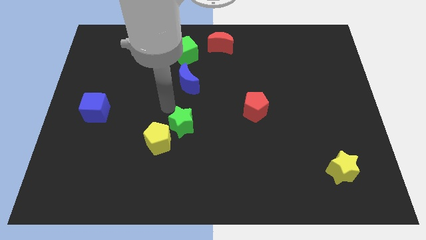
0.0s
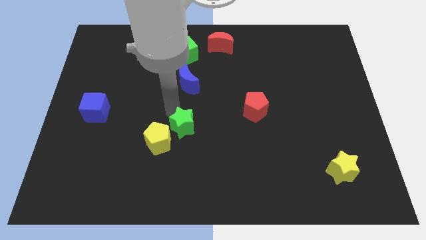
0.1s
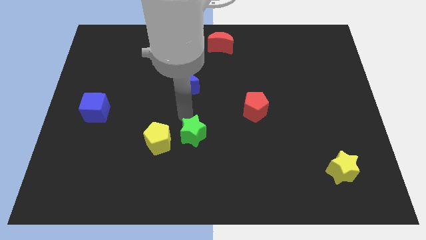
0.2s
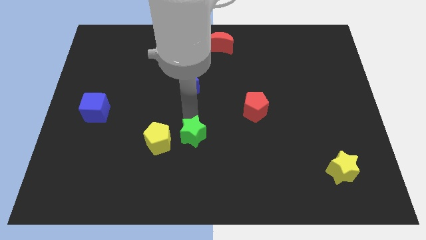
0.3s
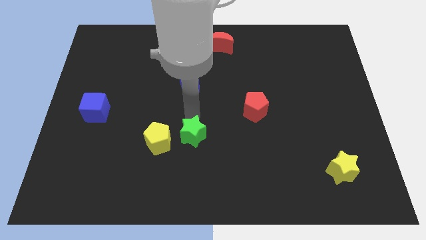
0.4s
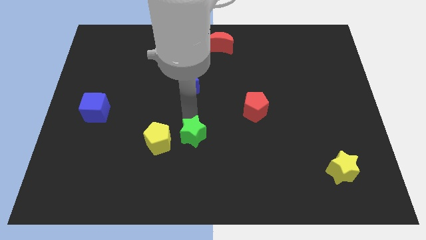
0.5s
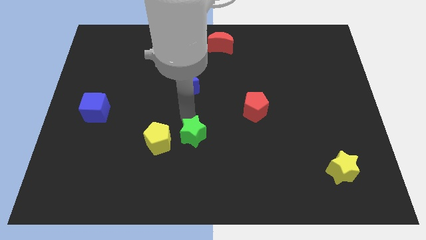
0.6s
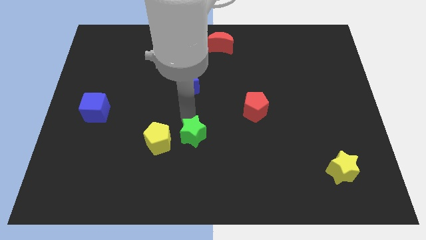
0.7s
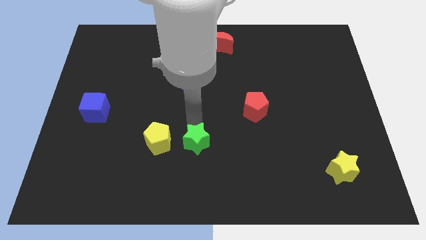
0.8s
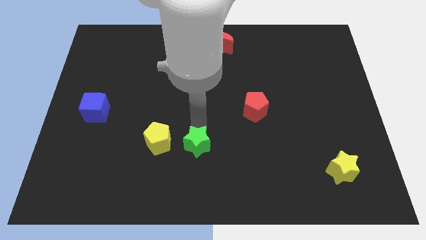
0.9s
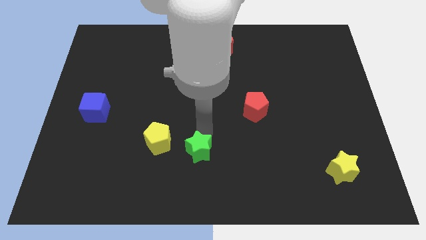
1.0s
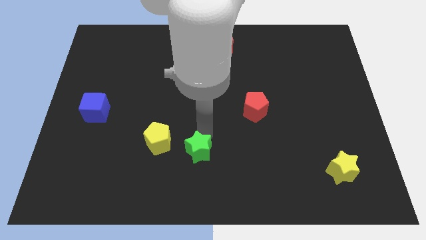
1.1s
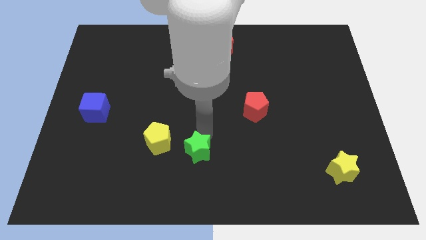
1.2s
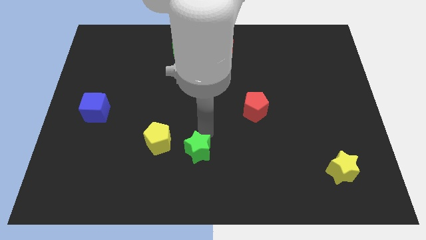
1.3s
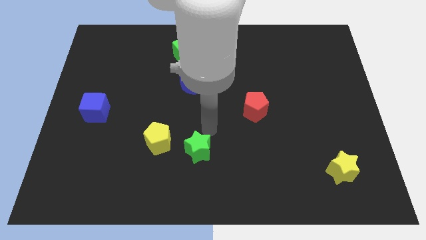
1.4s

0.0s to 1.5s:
push green star diagonally bottom right to the yellow pentagon

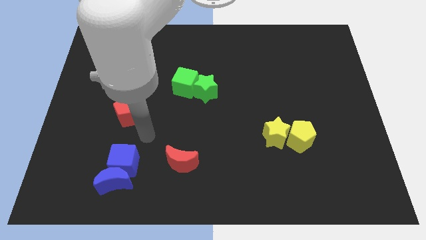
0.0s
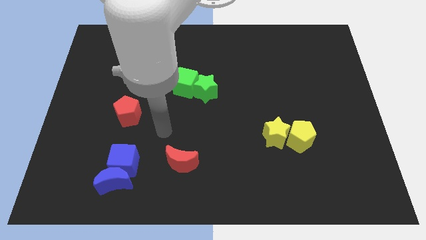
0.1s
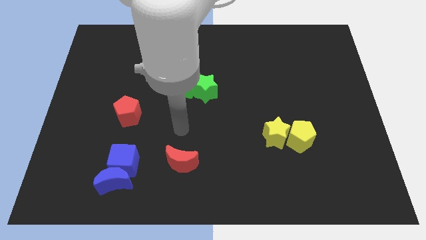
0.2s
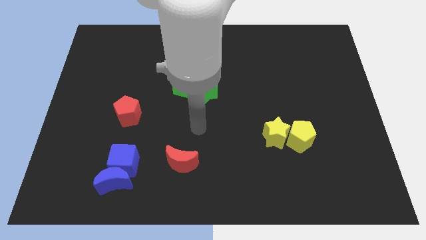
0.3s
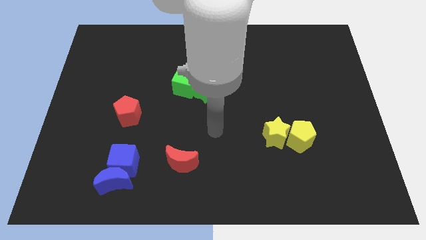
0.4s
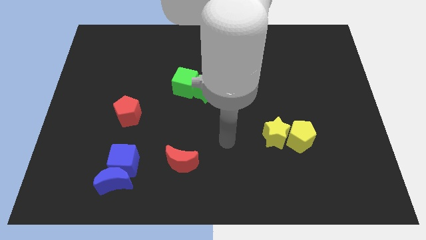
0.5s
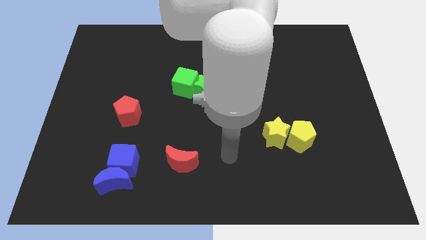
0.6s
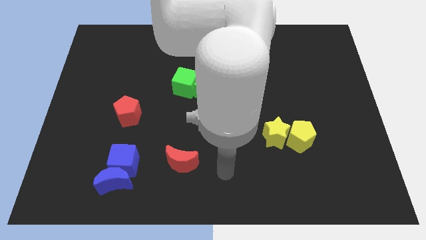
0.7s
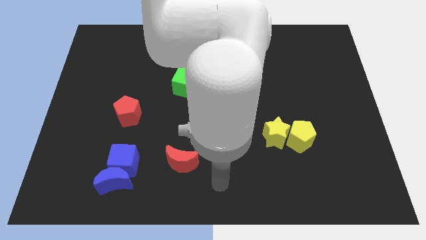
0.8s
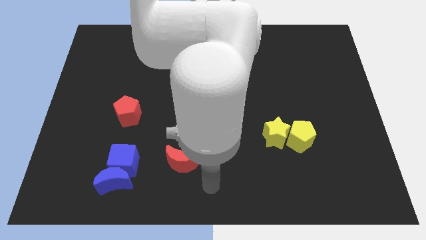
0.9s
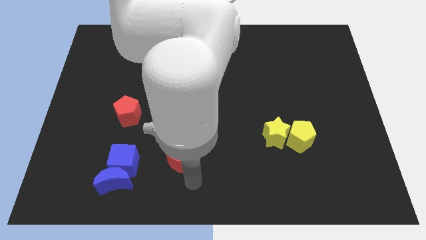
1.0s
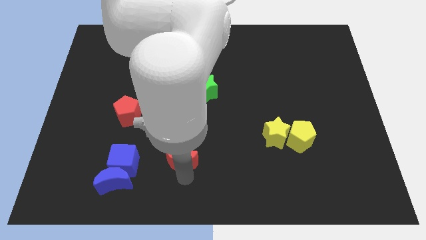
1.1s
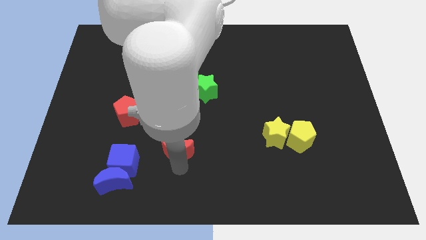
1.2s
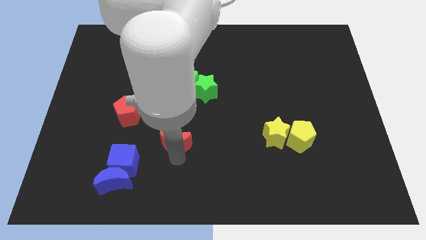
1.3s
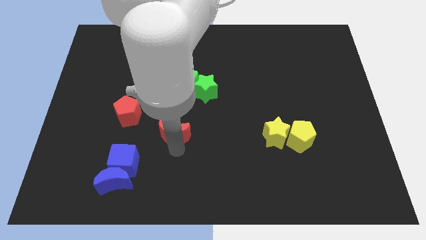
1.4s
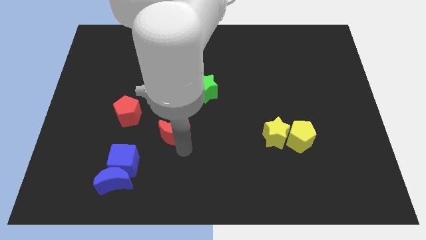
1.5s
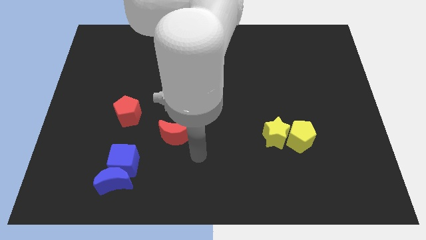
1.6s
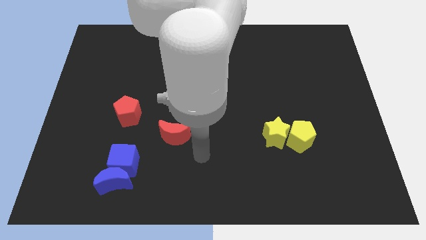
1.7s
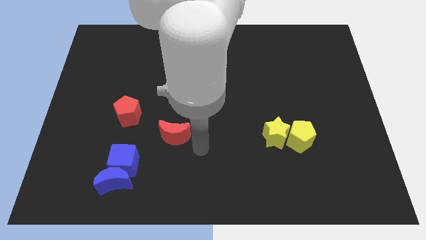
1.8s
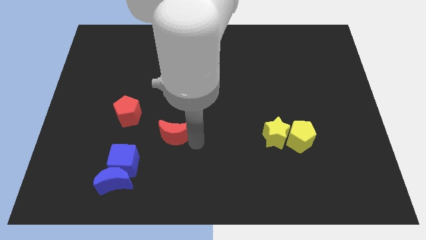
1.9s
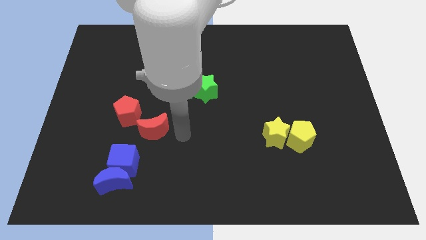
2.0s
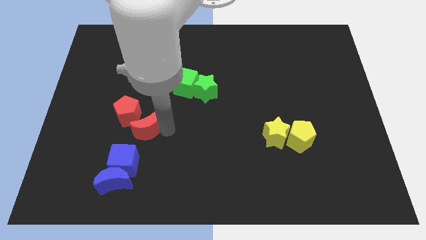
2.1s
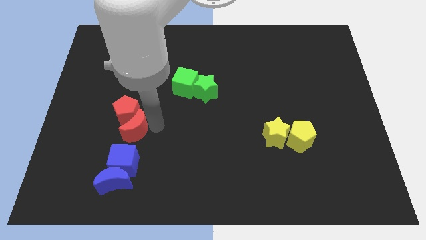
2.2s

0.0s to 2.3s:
place the red crescent beside the red pentagon

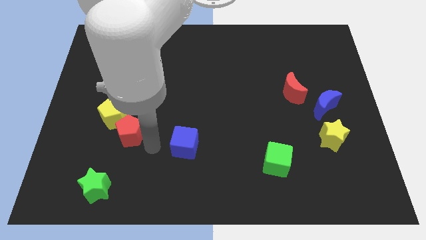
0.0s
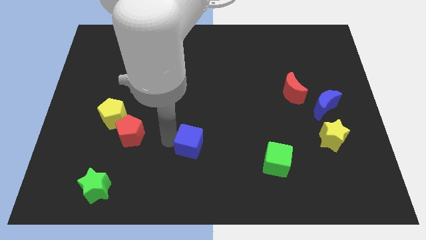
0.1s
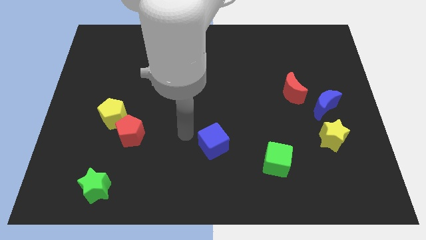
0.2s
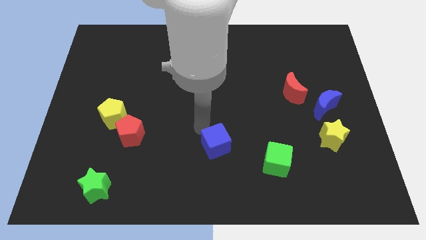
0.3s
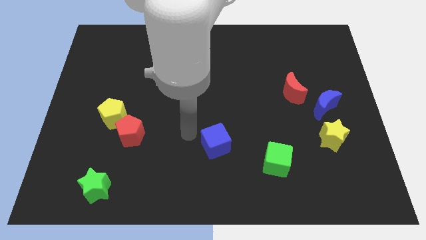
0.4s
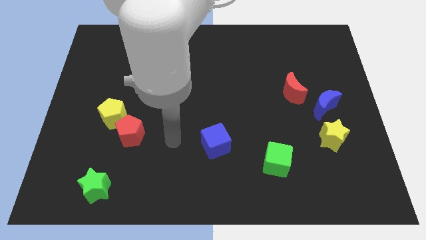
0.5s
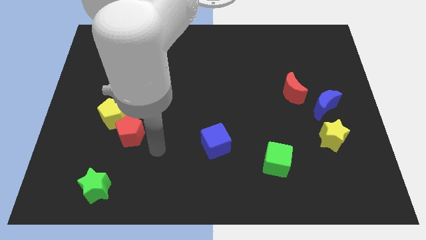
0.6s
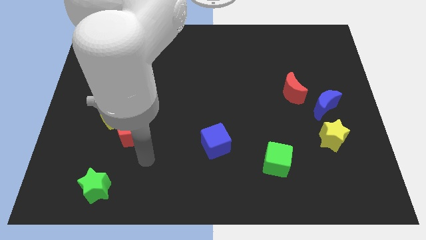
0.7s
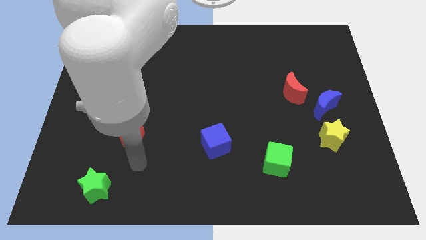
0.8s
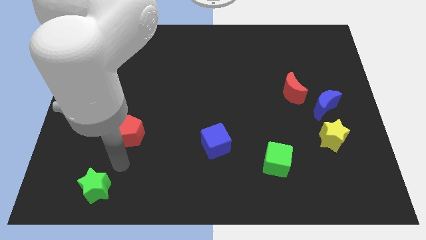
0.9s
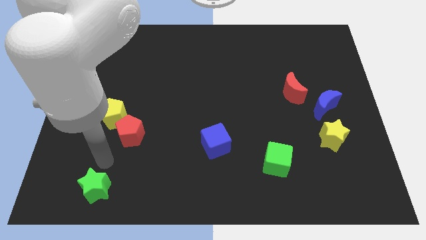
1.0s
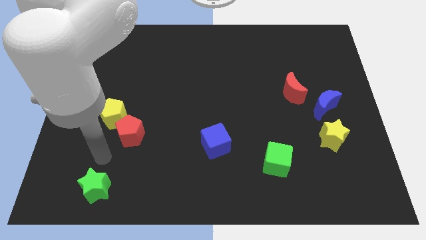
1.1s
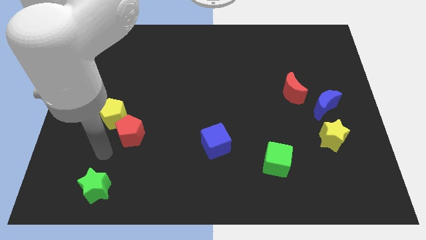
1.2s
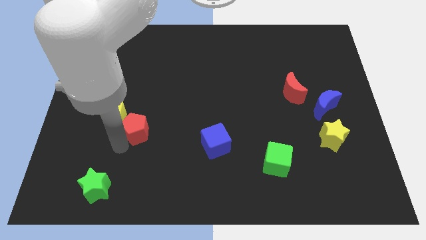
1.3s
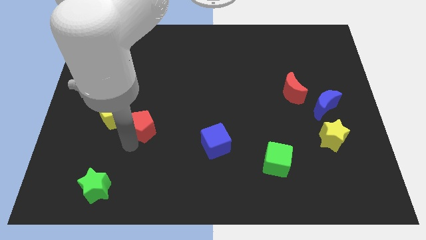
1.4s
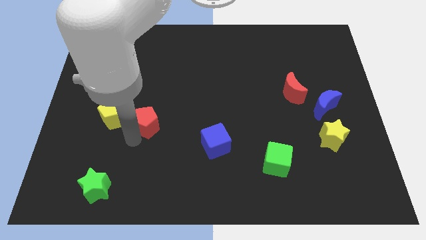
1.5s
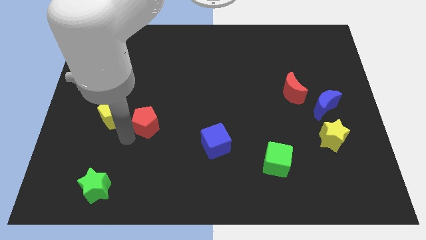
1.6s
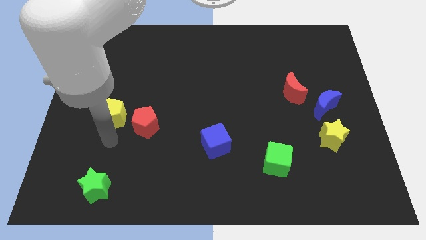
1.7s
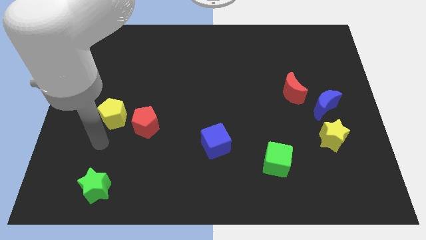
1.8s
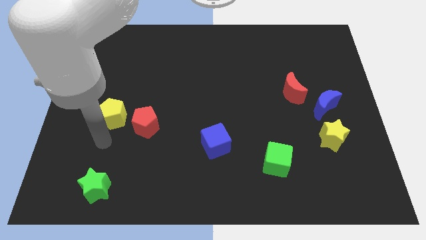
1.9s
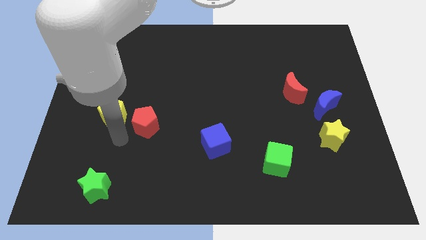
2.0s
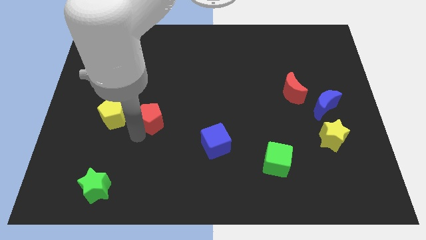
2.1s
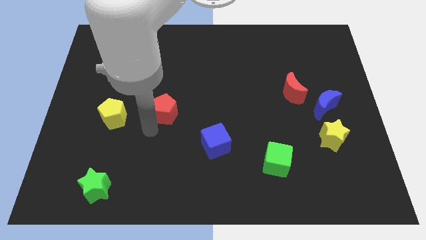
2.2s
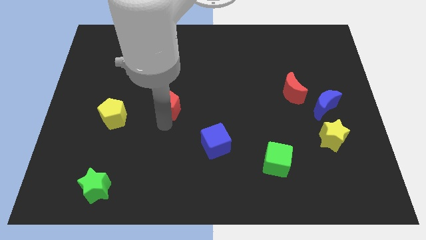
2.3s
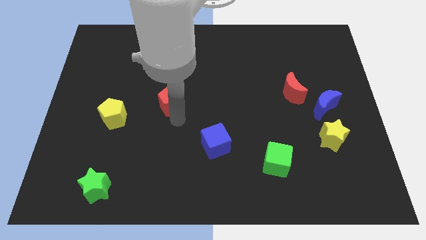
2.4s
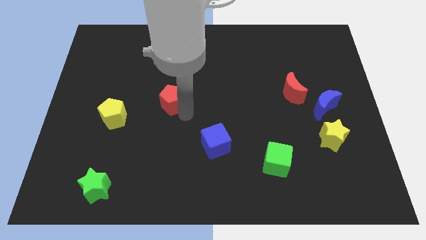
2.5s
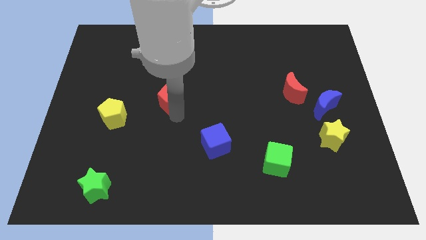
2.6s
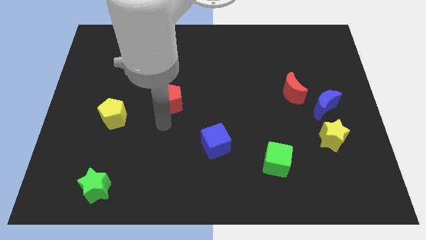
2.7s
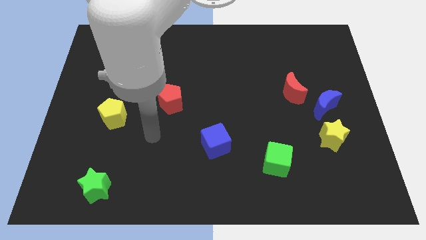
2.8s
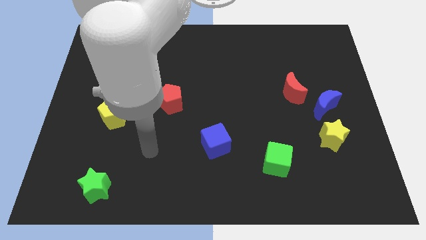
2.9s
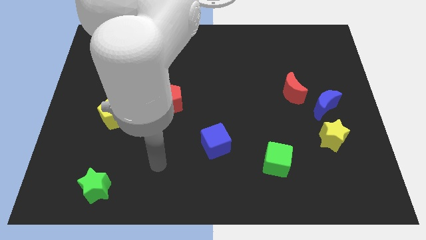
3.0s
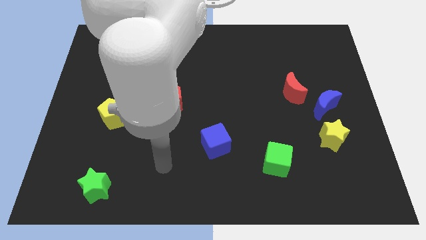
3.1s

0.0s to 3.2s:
place the red pentagon diagonal to the blue cube

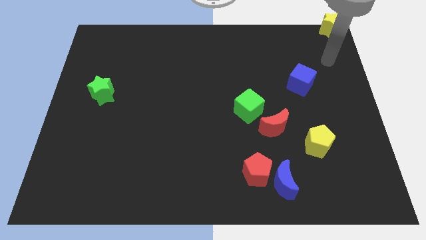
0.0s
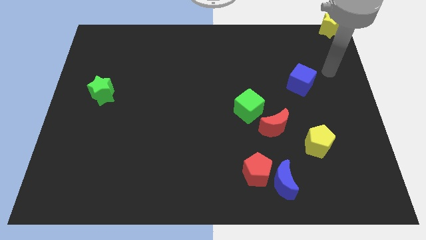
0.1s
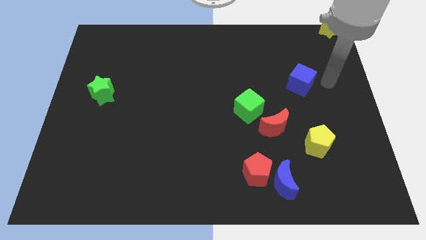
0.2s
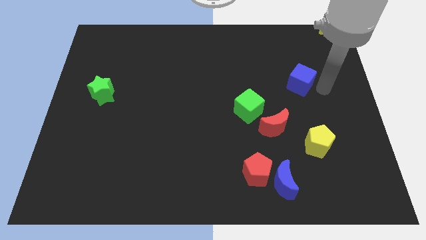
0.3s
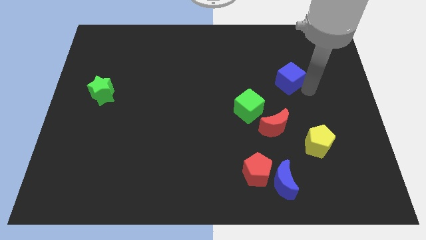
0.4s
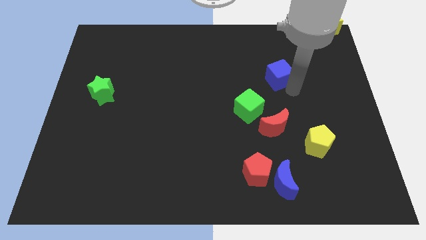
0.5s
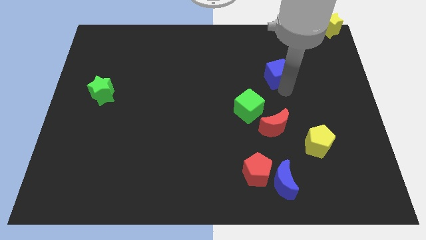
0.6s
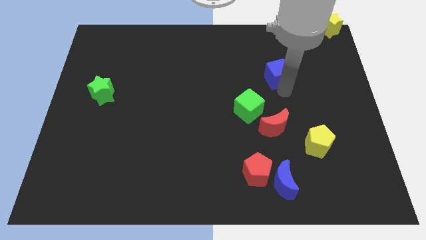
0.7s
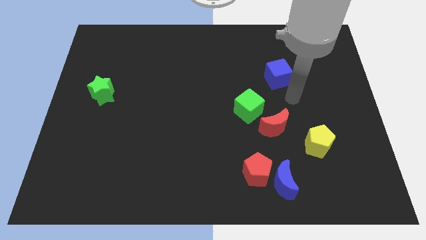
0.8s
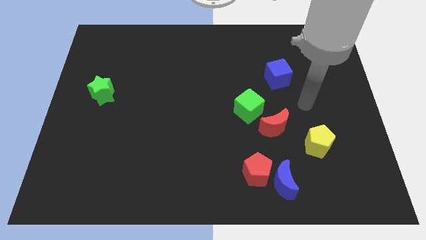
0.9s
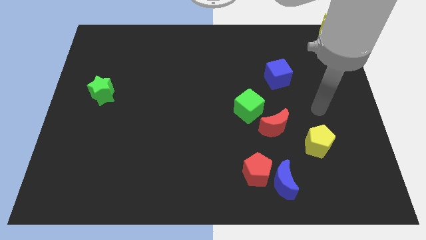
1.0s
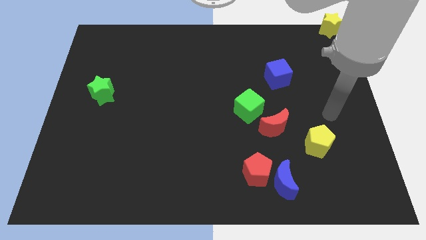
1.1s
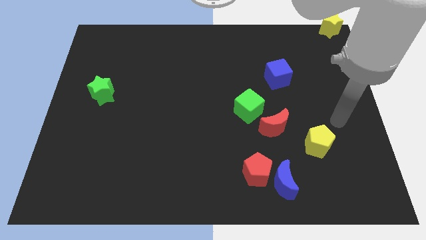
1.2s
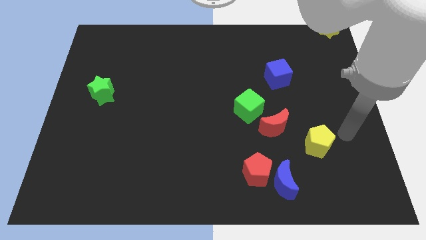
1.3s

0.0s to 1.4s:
move the blue cube towards the green cube

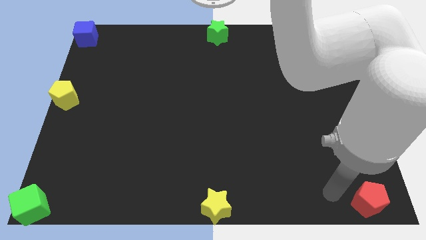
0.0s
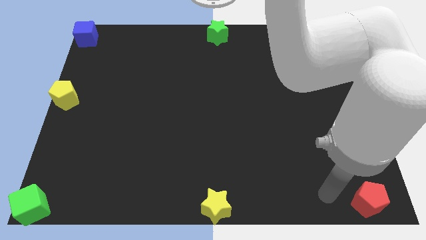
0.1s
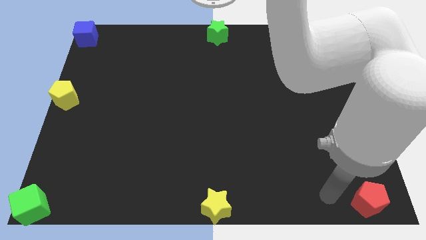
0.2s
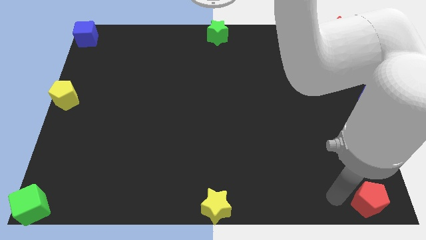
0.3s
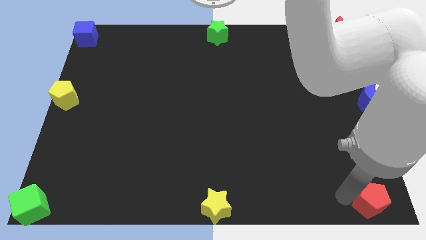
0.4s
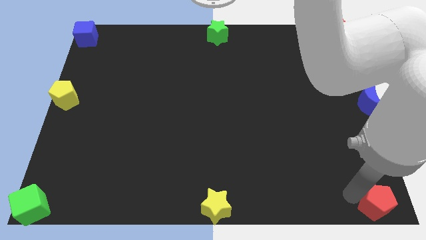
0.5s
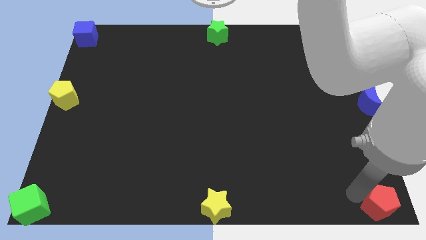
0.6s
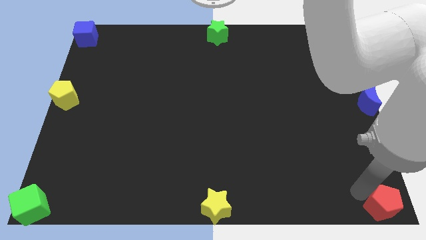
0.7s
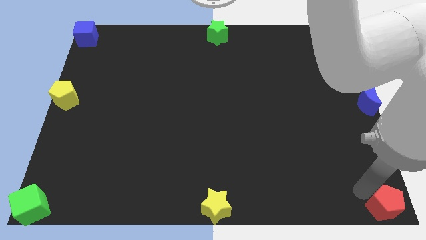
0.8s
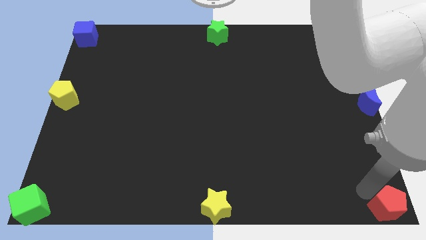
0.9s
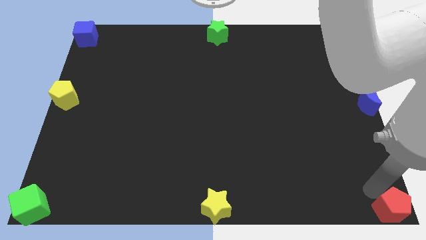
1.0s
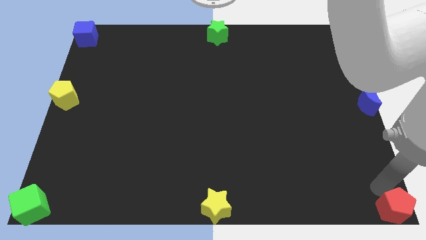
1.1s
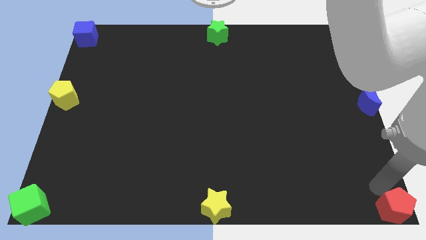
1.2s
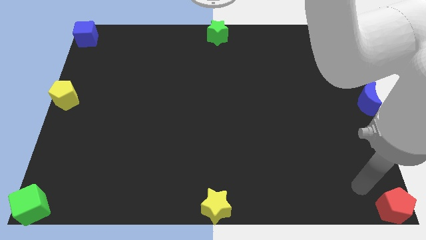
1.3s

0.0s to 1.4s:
push the red pentagon to the bottom right corner of the board
